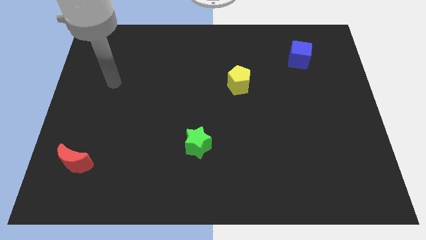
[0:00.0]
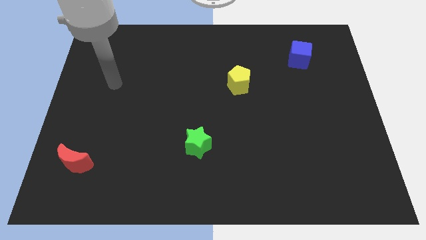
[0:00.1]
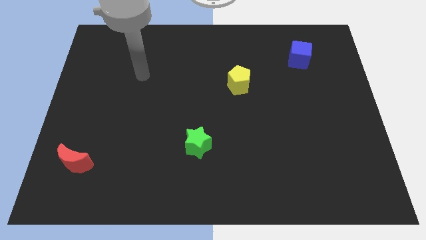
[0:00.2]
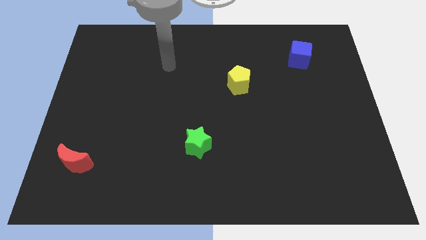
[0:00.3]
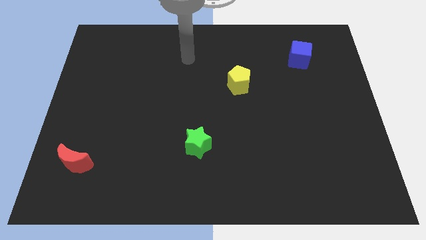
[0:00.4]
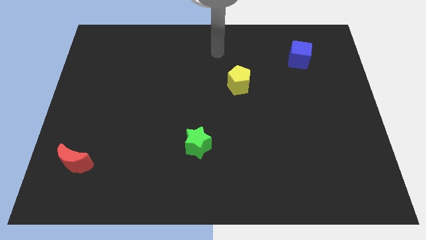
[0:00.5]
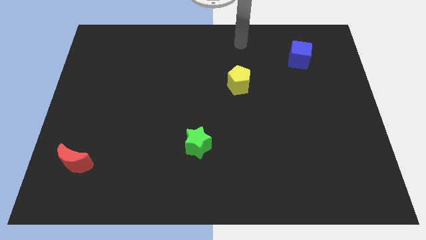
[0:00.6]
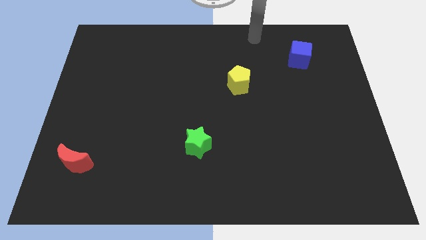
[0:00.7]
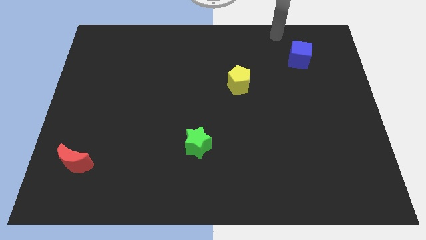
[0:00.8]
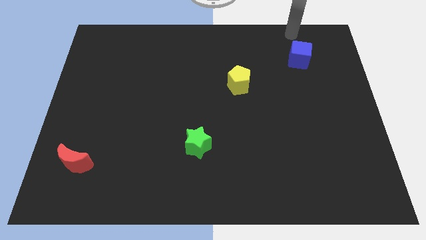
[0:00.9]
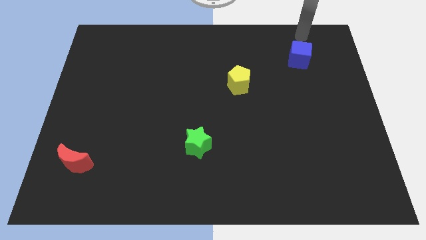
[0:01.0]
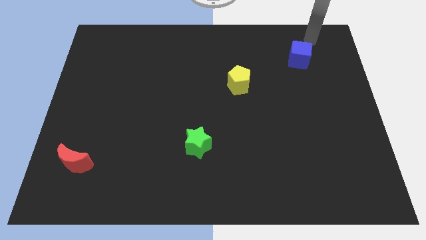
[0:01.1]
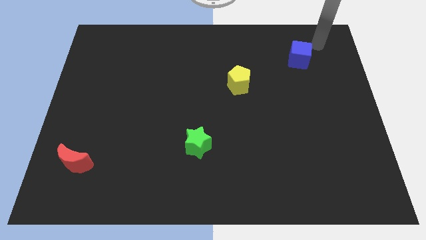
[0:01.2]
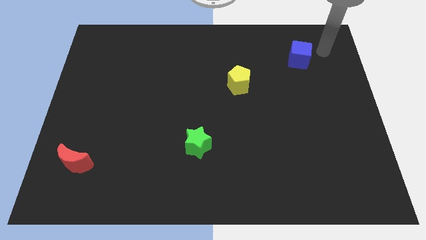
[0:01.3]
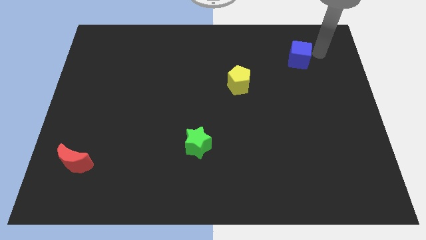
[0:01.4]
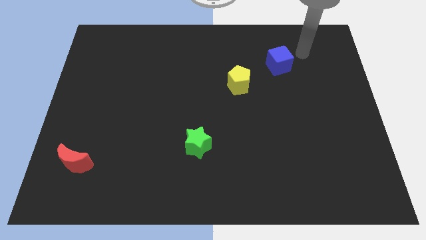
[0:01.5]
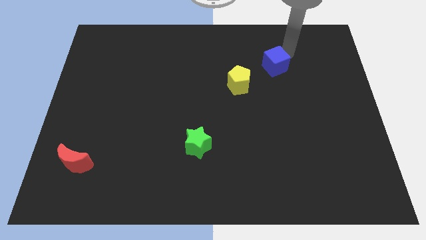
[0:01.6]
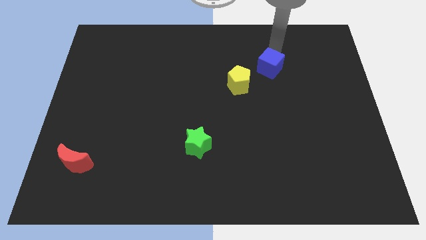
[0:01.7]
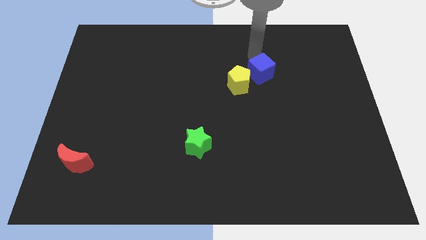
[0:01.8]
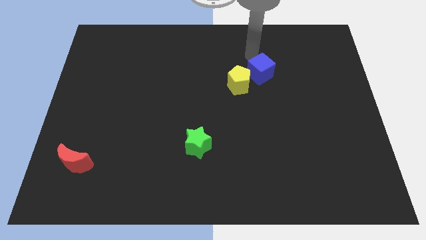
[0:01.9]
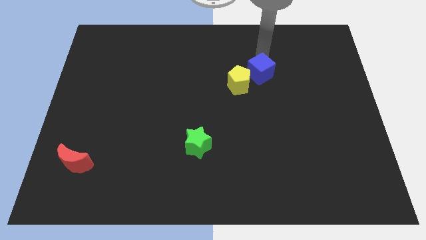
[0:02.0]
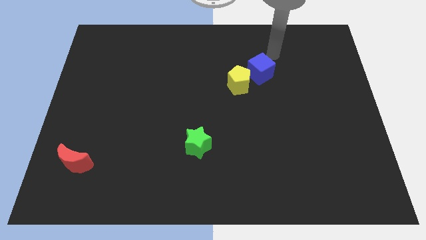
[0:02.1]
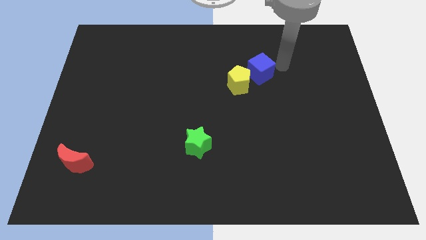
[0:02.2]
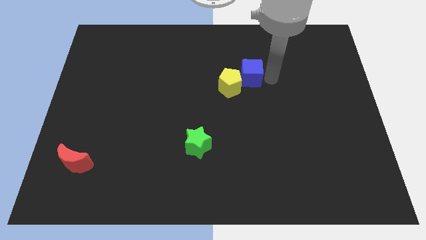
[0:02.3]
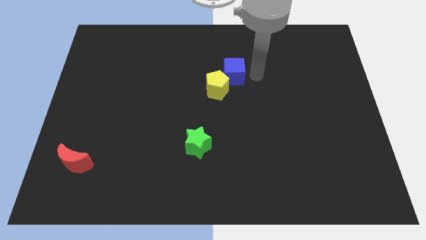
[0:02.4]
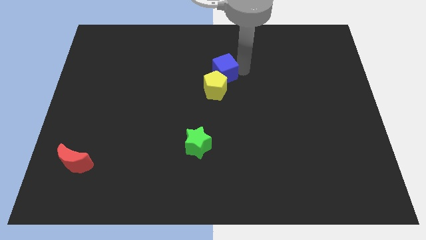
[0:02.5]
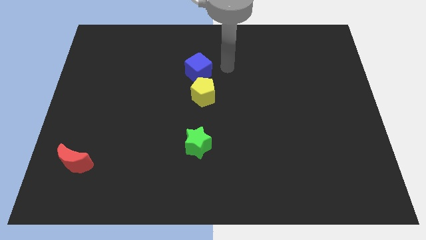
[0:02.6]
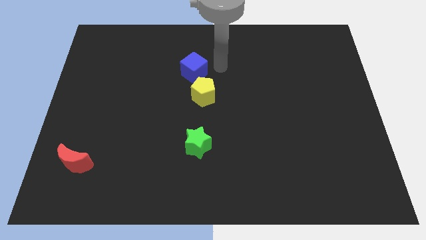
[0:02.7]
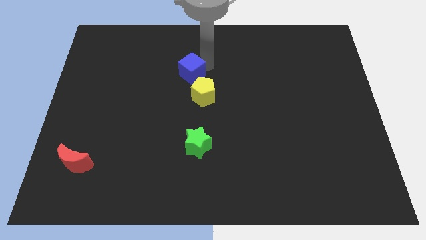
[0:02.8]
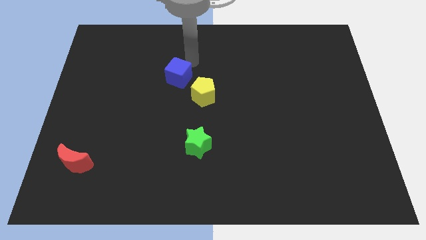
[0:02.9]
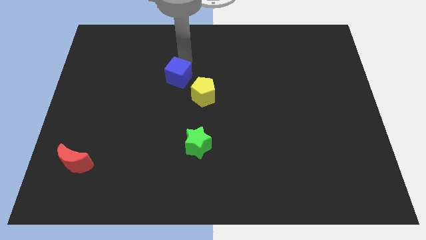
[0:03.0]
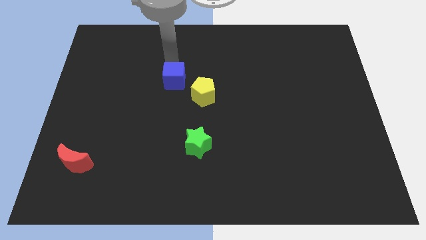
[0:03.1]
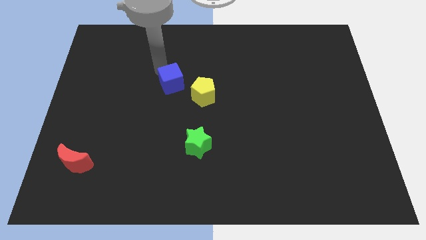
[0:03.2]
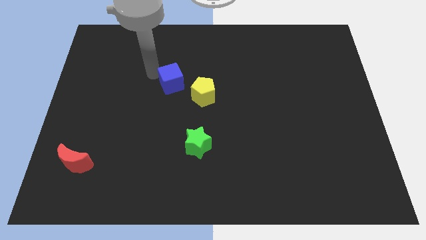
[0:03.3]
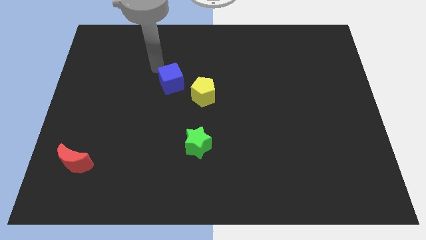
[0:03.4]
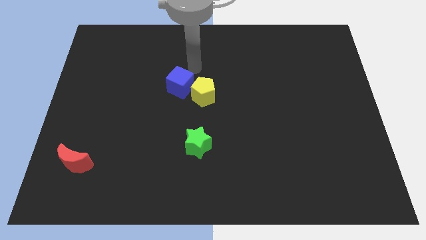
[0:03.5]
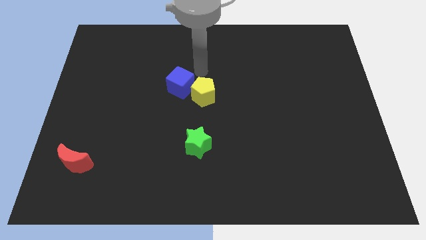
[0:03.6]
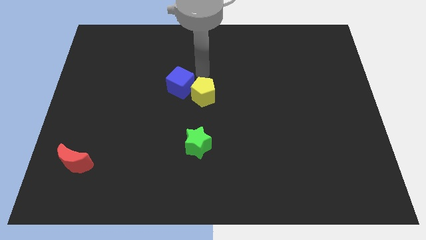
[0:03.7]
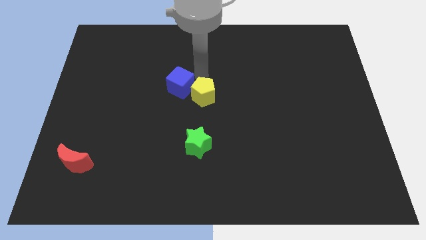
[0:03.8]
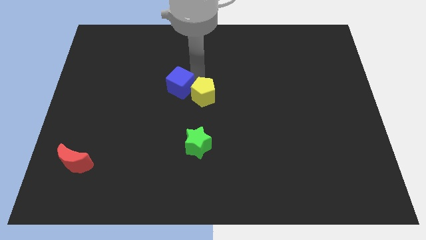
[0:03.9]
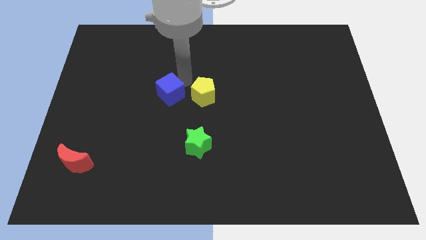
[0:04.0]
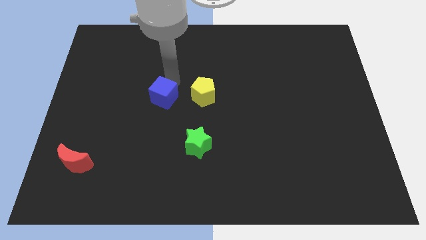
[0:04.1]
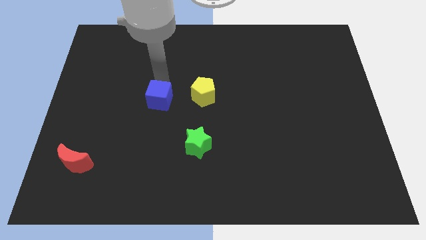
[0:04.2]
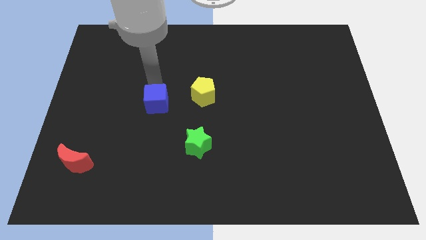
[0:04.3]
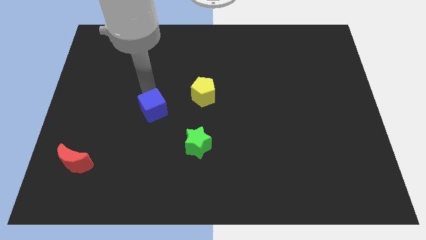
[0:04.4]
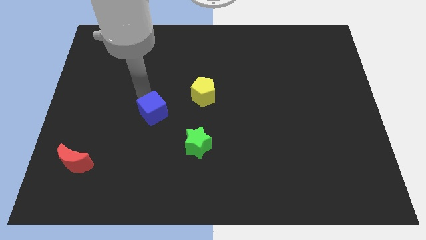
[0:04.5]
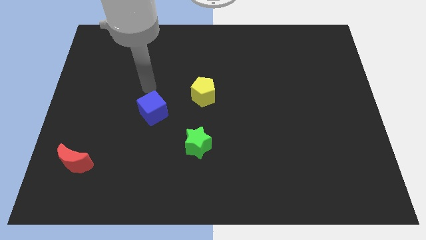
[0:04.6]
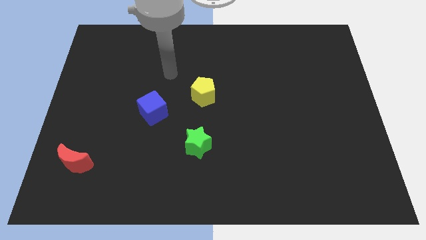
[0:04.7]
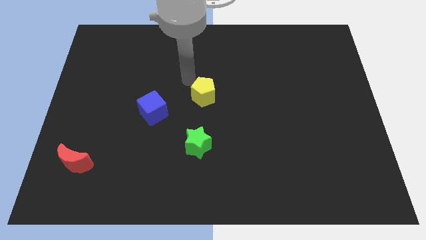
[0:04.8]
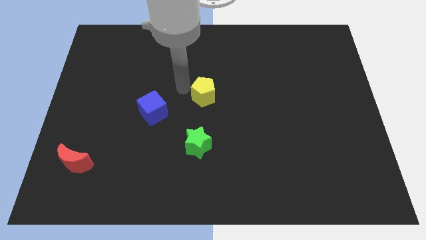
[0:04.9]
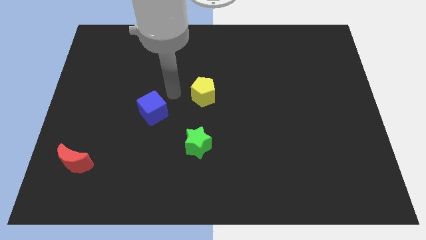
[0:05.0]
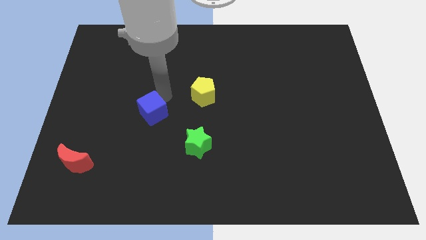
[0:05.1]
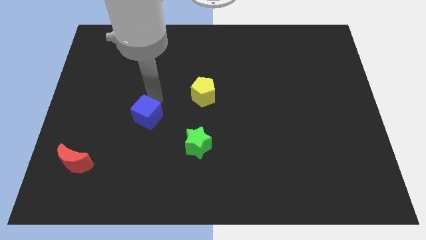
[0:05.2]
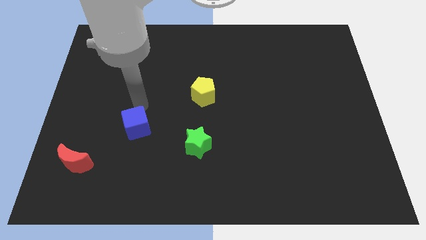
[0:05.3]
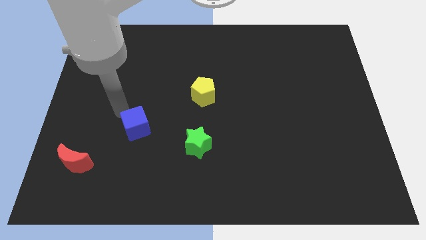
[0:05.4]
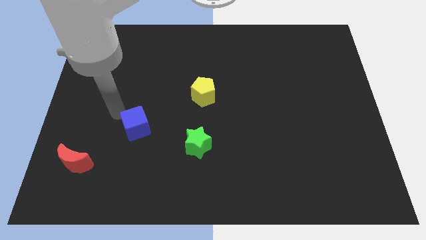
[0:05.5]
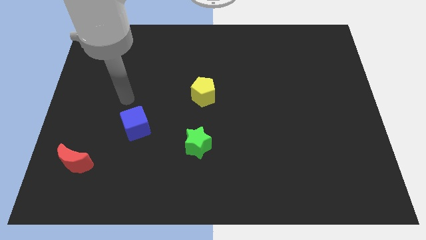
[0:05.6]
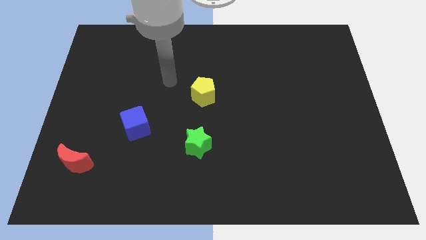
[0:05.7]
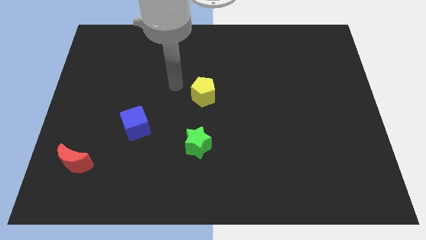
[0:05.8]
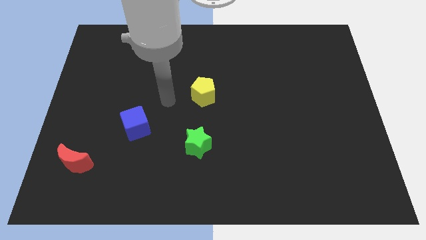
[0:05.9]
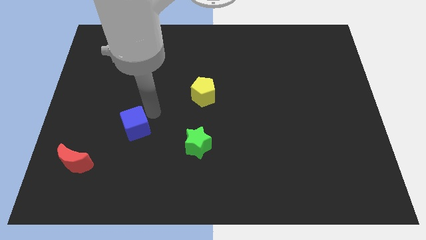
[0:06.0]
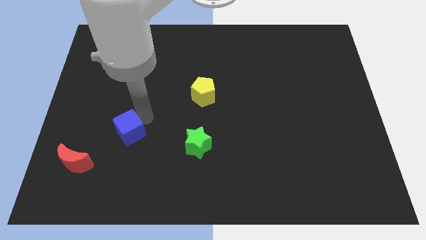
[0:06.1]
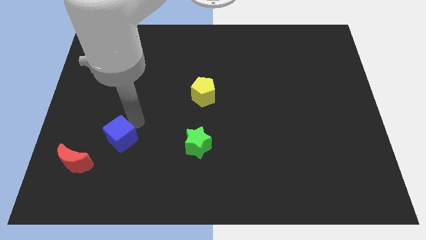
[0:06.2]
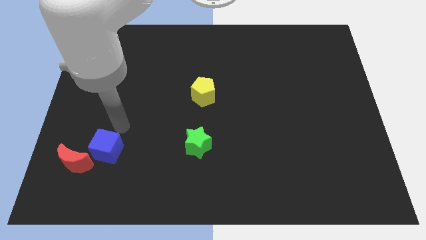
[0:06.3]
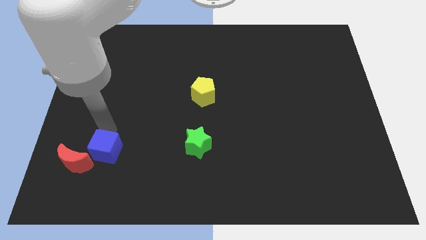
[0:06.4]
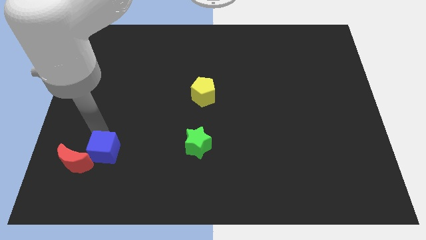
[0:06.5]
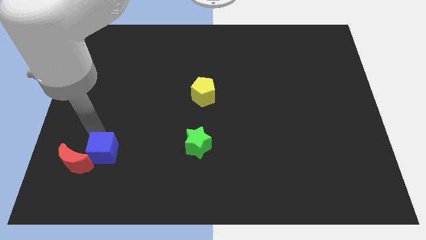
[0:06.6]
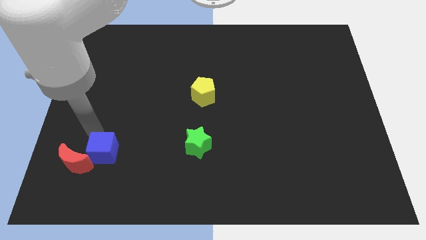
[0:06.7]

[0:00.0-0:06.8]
put the blue block next to the moon

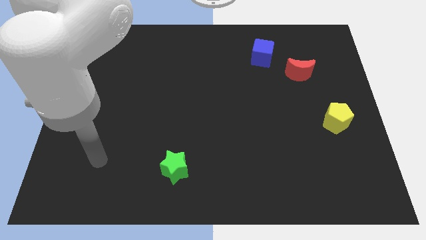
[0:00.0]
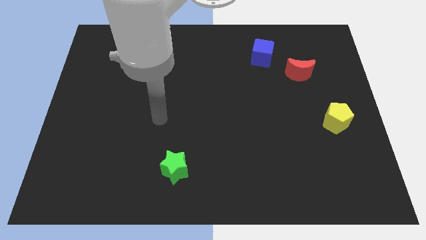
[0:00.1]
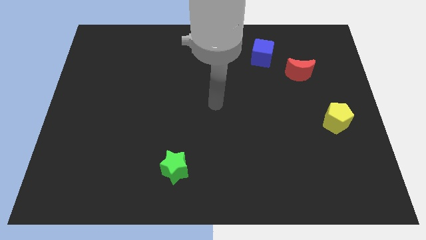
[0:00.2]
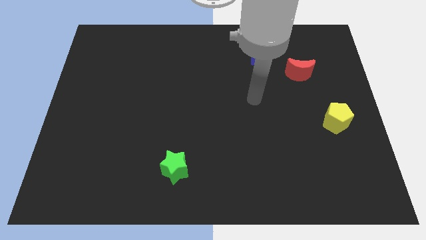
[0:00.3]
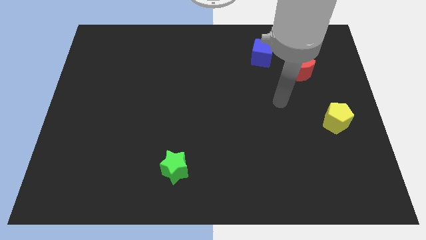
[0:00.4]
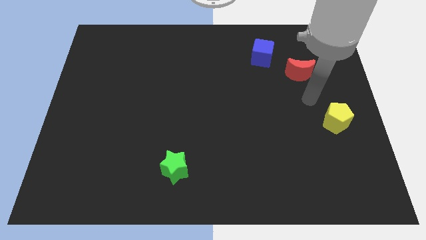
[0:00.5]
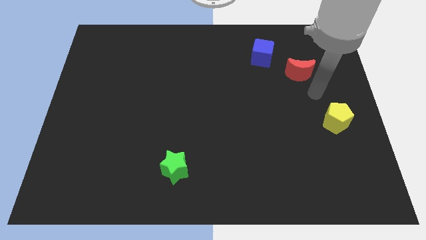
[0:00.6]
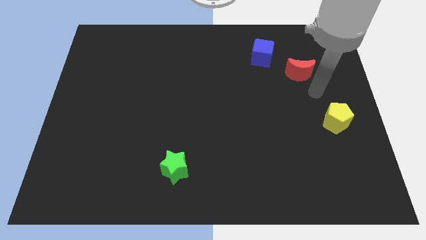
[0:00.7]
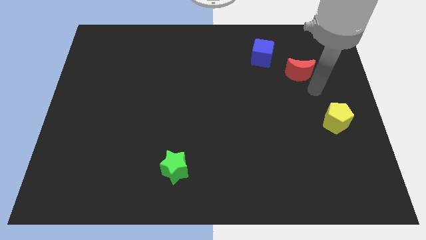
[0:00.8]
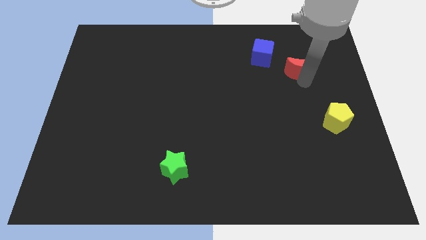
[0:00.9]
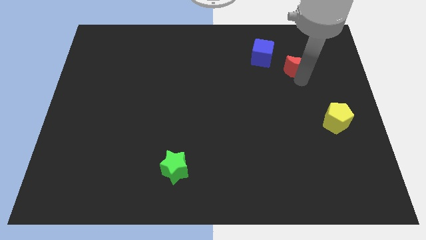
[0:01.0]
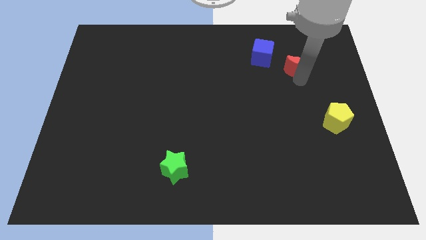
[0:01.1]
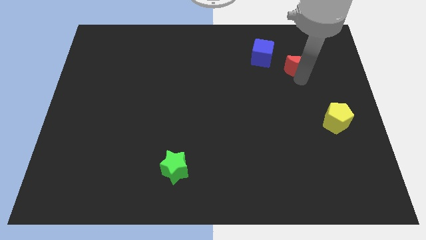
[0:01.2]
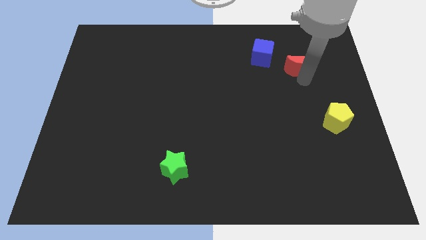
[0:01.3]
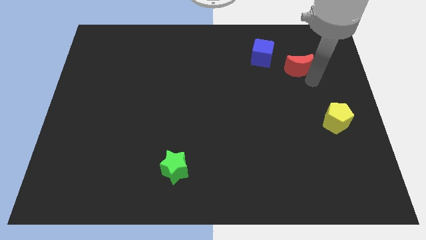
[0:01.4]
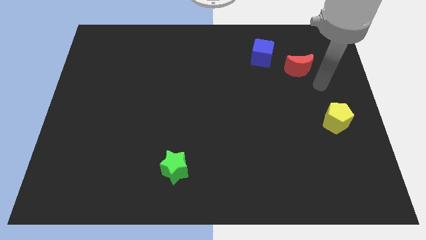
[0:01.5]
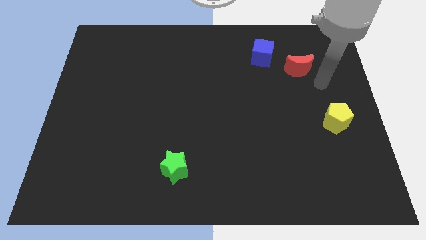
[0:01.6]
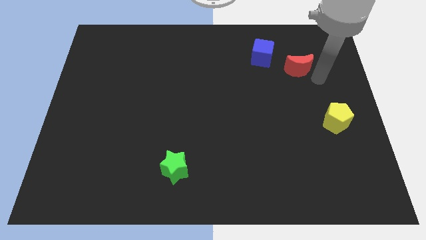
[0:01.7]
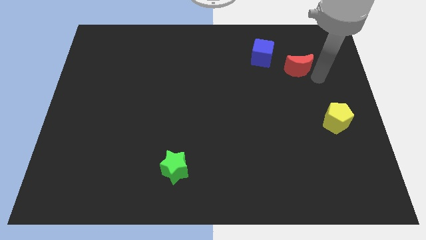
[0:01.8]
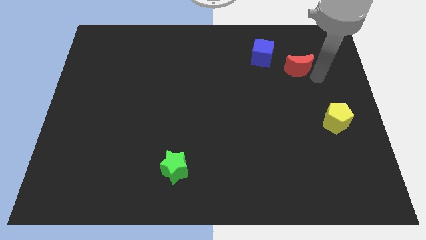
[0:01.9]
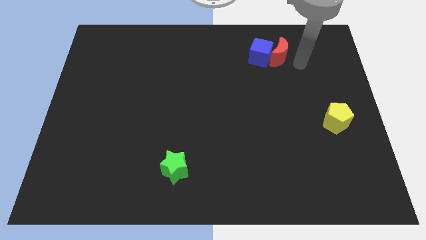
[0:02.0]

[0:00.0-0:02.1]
slide the red moon next to the cube
